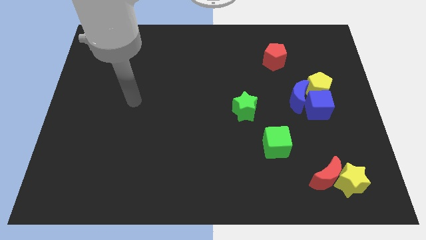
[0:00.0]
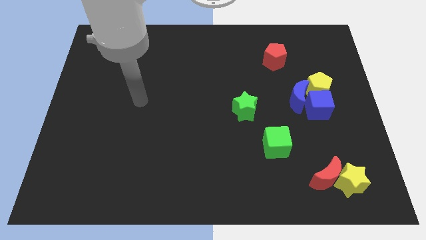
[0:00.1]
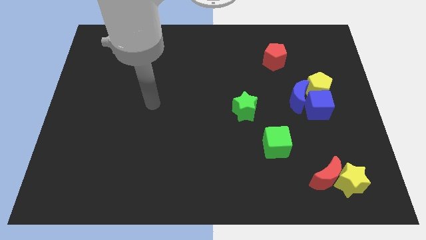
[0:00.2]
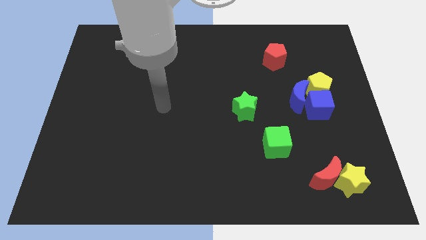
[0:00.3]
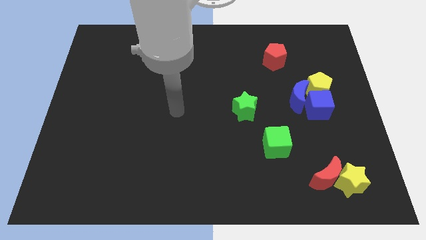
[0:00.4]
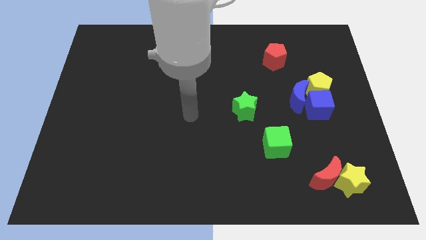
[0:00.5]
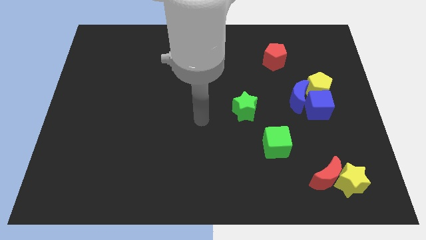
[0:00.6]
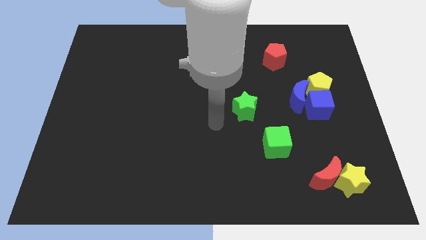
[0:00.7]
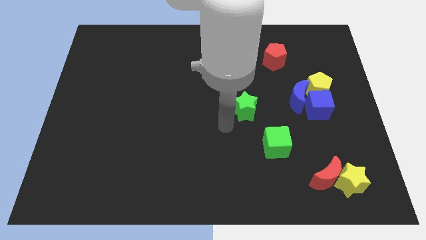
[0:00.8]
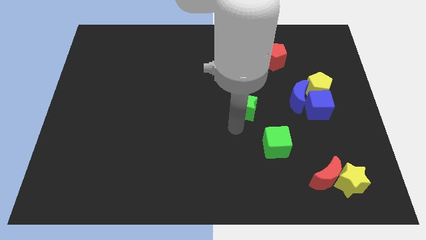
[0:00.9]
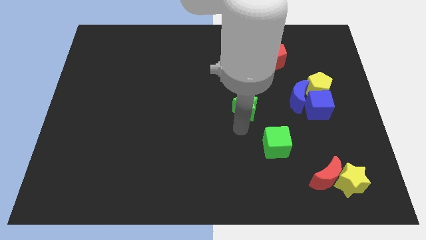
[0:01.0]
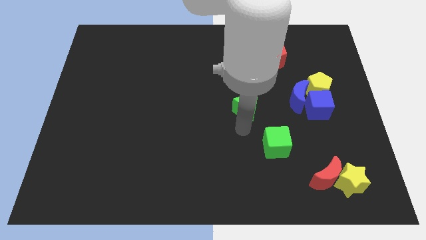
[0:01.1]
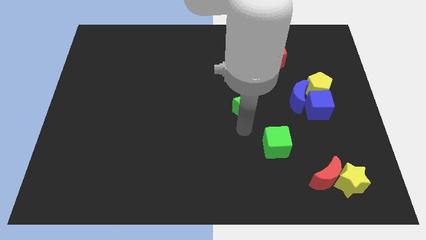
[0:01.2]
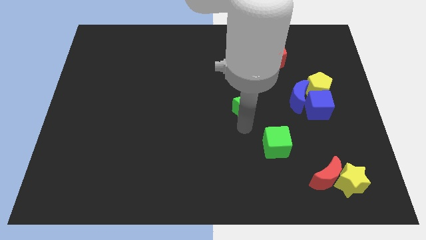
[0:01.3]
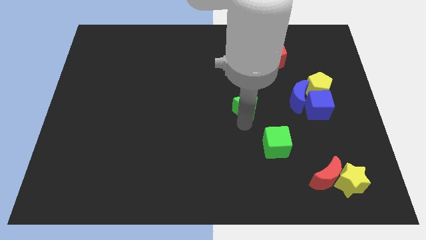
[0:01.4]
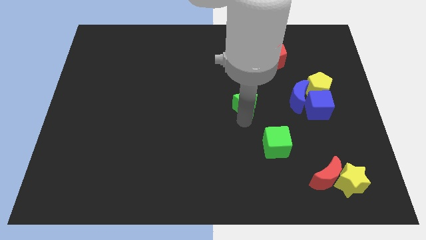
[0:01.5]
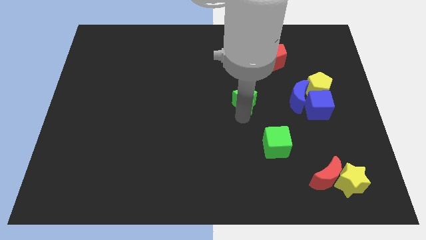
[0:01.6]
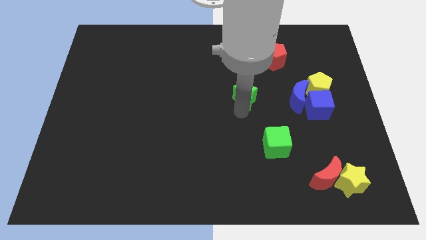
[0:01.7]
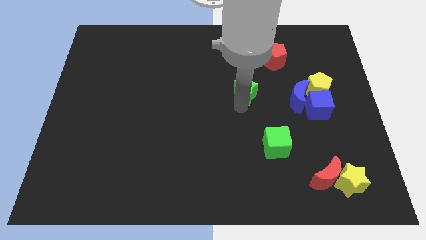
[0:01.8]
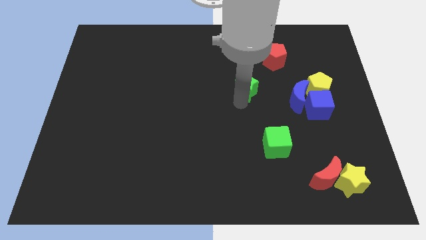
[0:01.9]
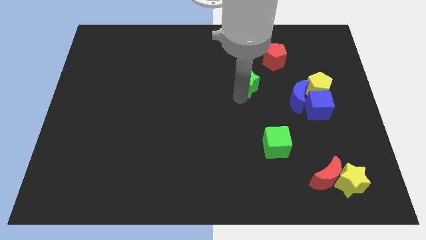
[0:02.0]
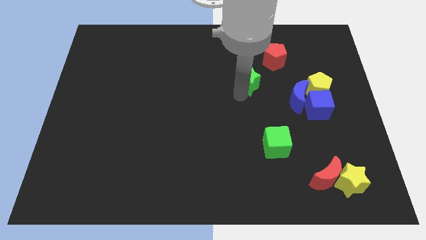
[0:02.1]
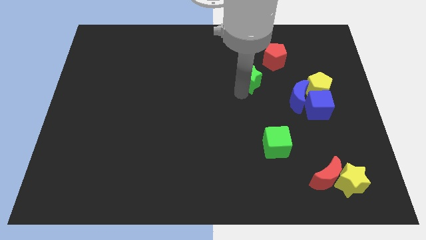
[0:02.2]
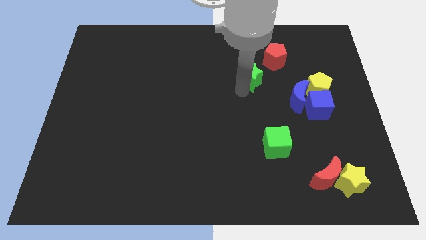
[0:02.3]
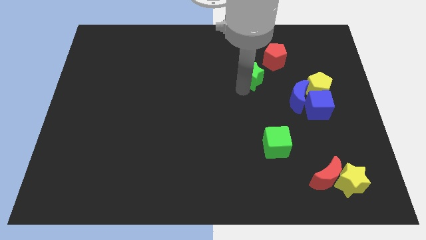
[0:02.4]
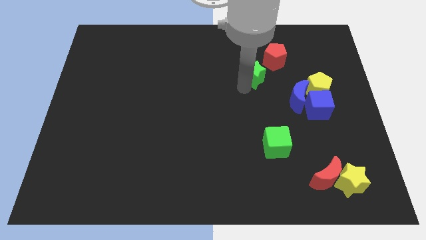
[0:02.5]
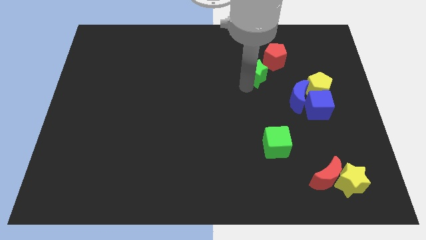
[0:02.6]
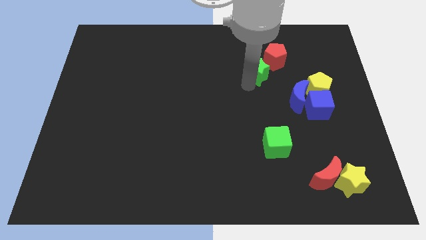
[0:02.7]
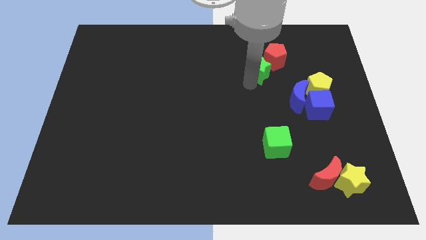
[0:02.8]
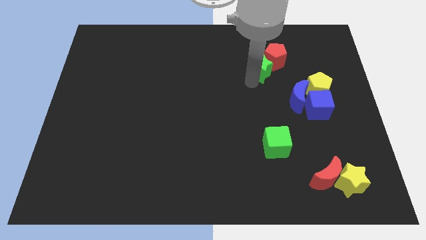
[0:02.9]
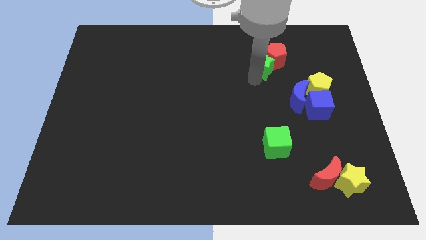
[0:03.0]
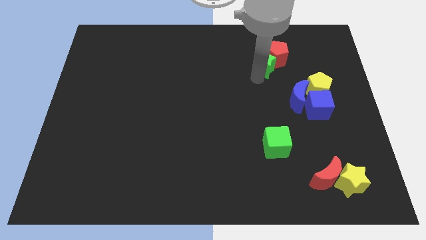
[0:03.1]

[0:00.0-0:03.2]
slide the green star to the red pentagon

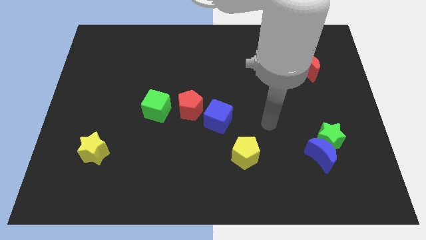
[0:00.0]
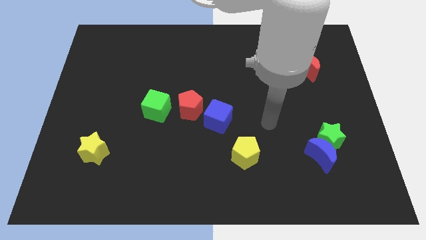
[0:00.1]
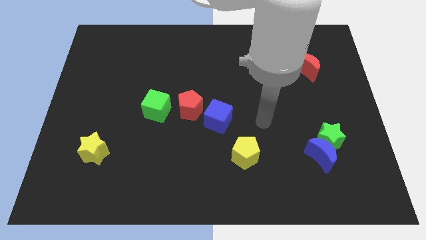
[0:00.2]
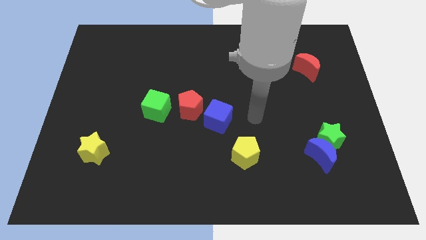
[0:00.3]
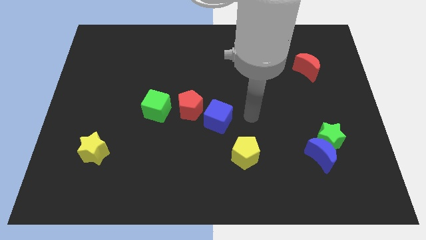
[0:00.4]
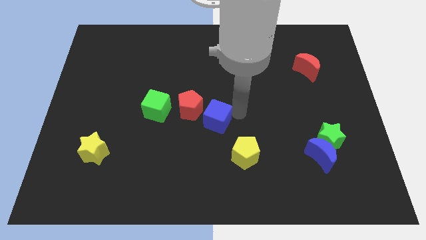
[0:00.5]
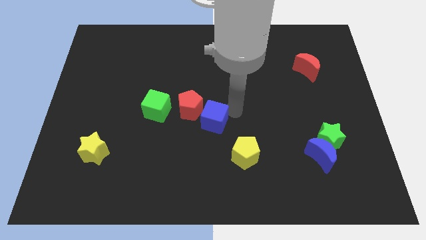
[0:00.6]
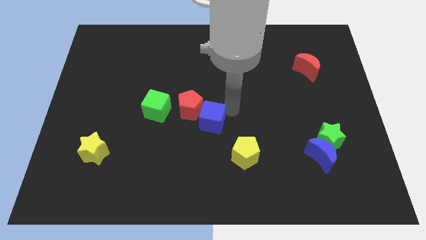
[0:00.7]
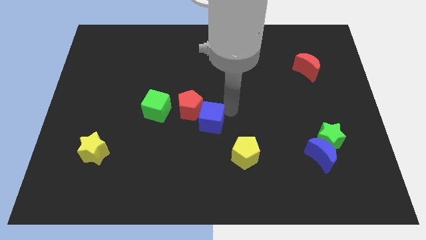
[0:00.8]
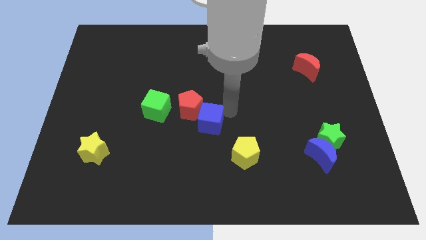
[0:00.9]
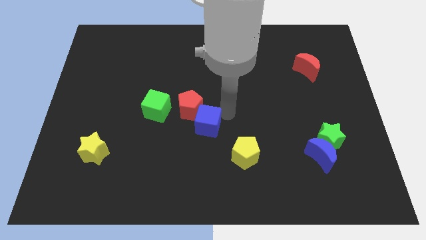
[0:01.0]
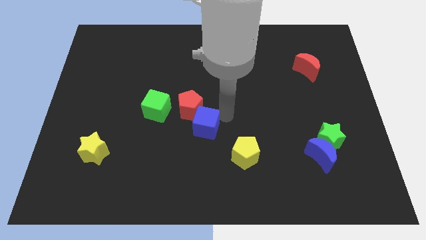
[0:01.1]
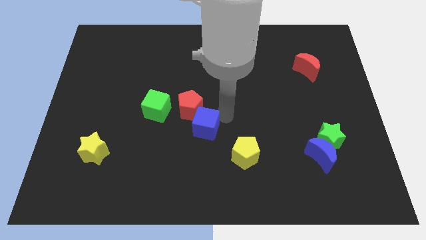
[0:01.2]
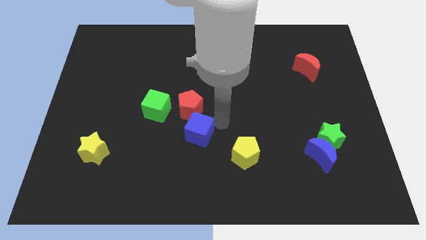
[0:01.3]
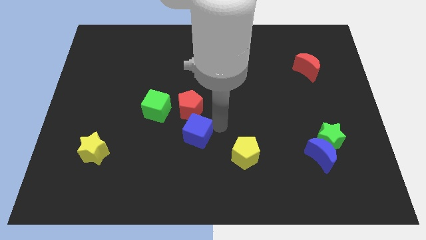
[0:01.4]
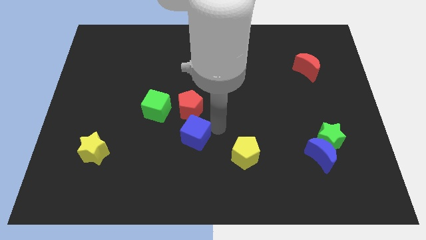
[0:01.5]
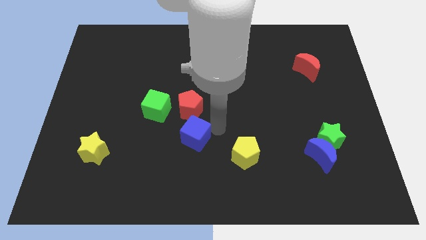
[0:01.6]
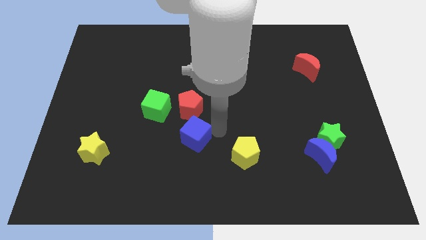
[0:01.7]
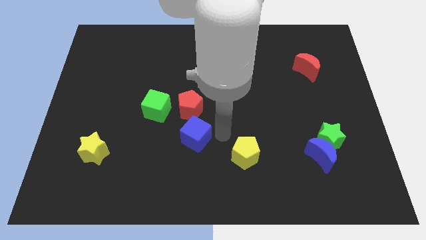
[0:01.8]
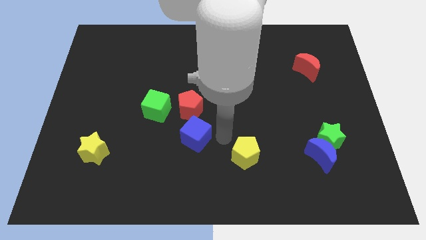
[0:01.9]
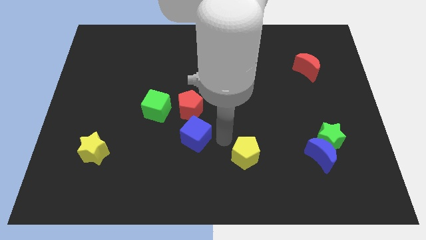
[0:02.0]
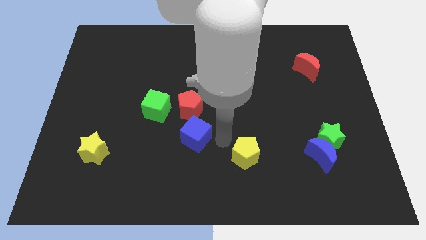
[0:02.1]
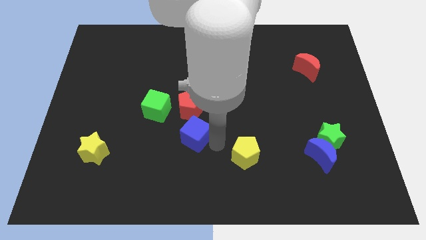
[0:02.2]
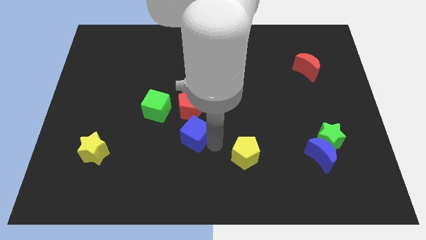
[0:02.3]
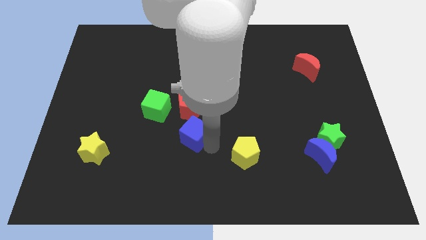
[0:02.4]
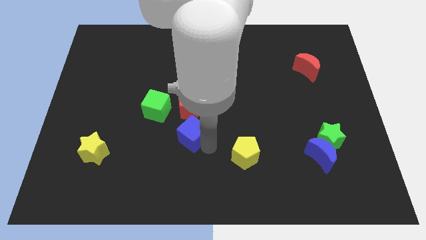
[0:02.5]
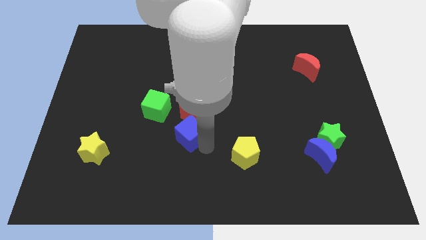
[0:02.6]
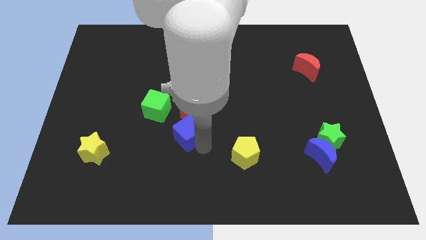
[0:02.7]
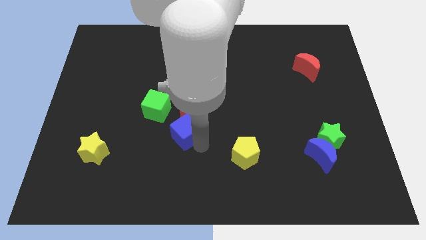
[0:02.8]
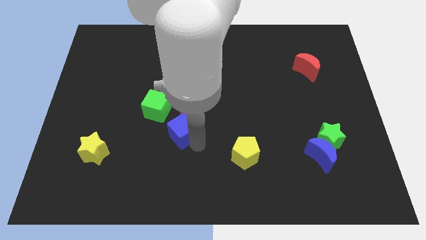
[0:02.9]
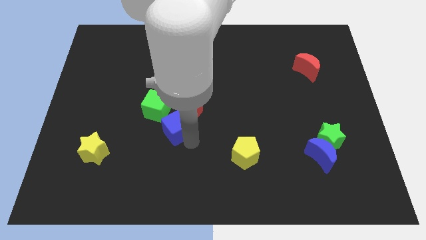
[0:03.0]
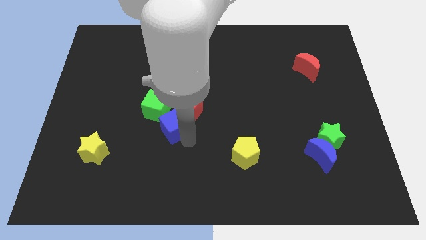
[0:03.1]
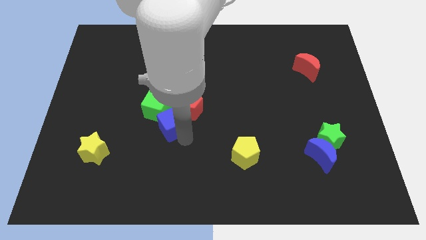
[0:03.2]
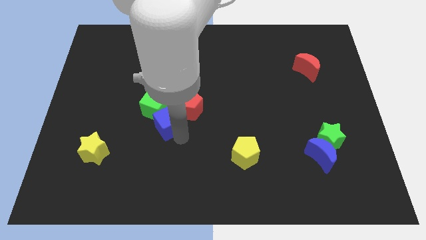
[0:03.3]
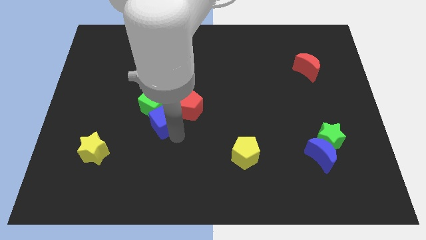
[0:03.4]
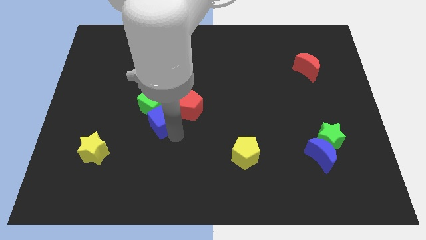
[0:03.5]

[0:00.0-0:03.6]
push the blue cube next to the green cube

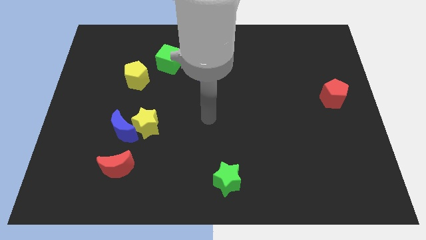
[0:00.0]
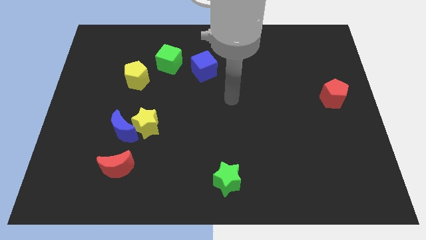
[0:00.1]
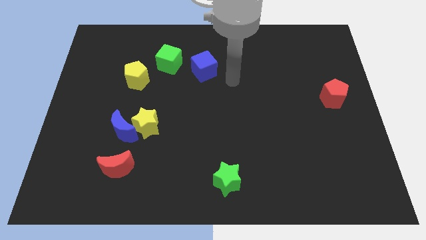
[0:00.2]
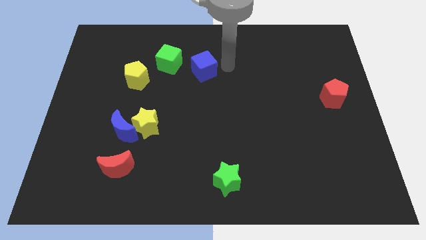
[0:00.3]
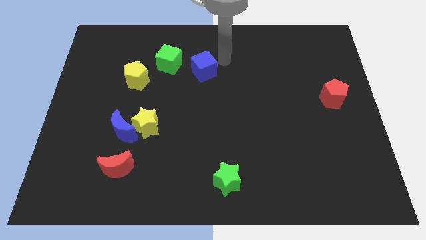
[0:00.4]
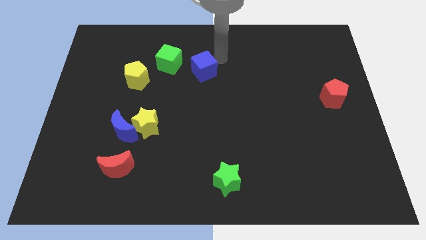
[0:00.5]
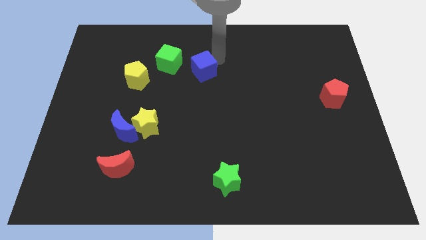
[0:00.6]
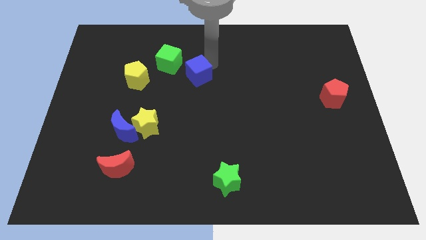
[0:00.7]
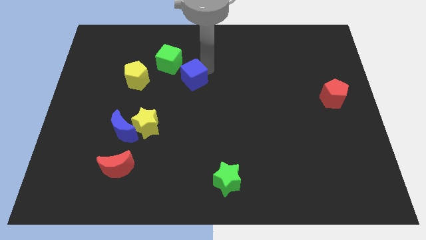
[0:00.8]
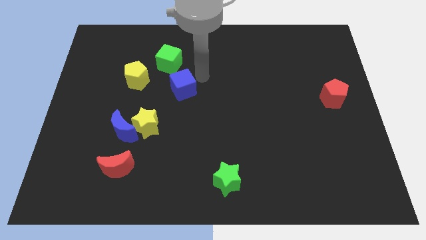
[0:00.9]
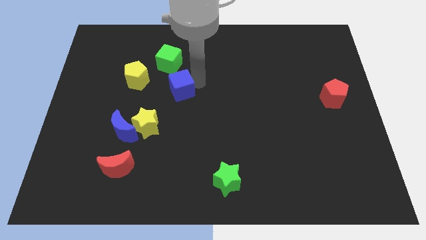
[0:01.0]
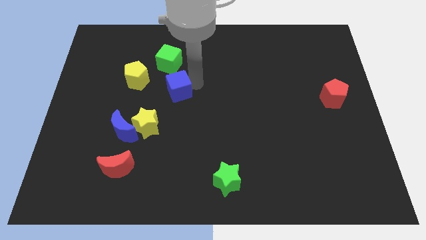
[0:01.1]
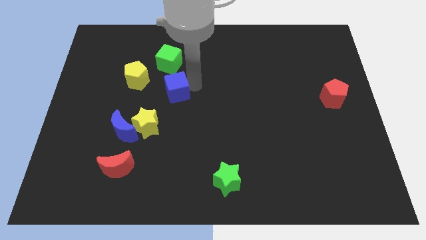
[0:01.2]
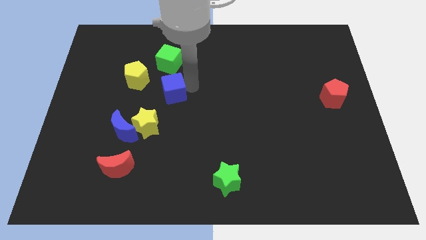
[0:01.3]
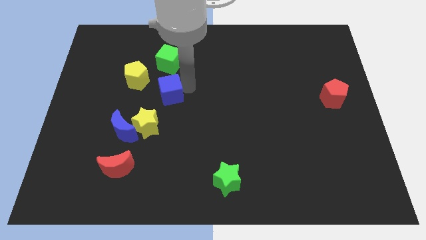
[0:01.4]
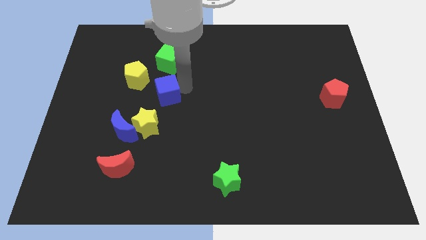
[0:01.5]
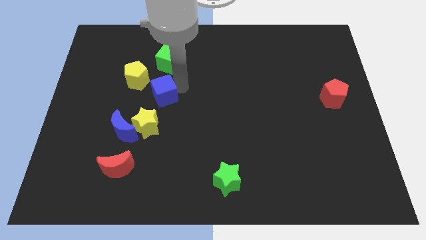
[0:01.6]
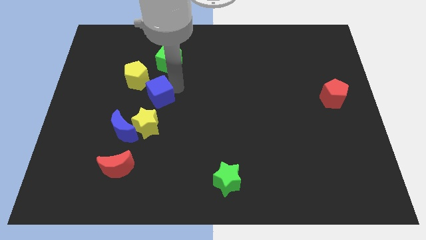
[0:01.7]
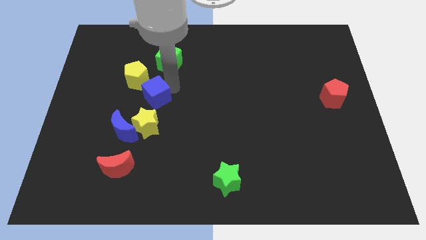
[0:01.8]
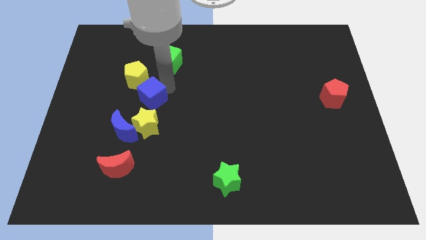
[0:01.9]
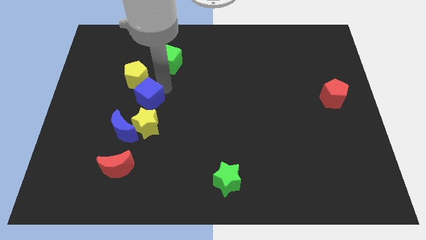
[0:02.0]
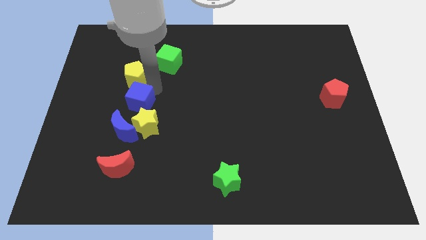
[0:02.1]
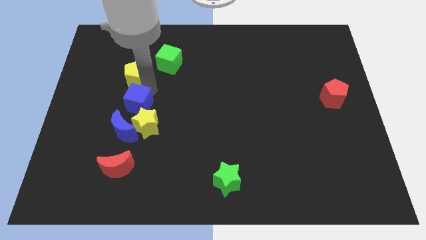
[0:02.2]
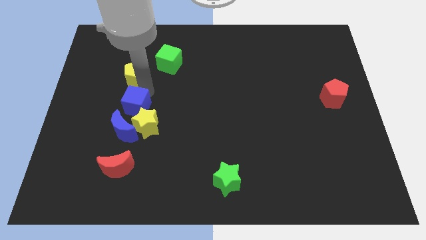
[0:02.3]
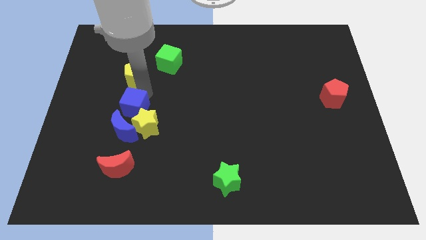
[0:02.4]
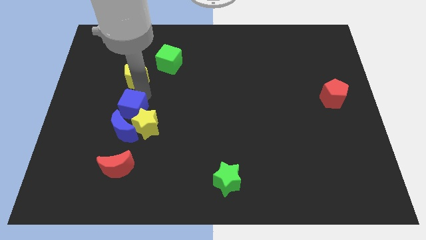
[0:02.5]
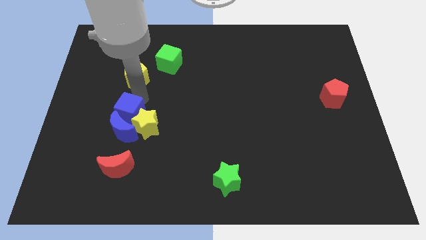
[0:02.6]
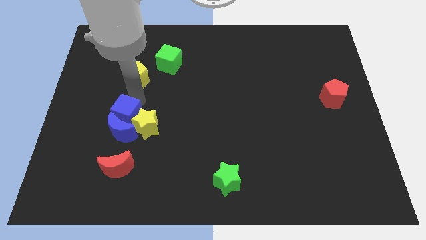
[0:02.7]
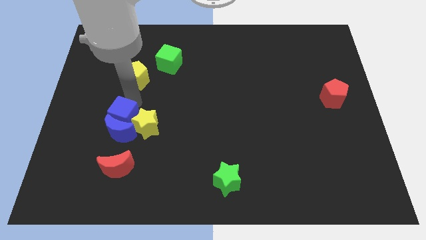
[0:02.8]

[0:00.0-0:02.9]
put the blue cube towards the blue moon
